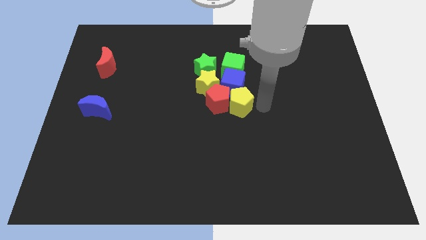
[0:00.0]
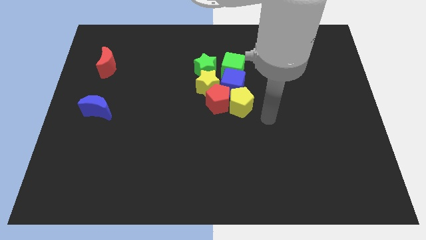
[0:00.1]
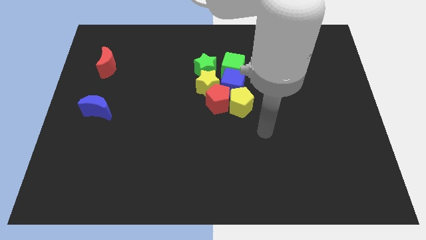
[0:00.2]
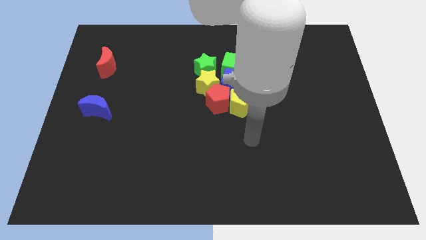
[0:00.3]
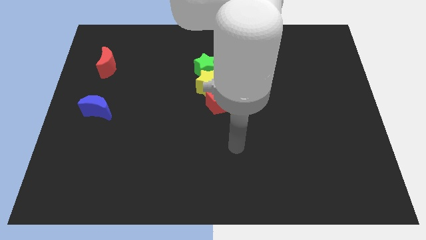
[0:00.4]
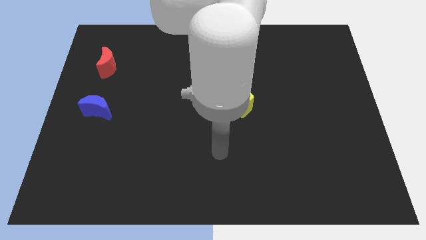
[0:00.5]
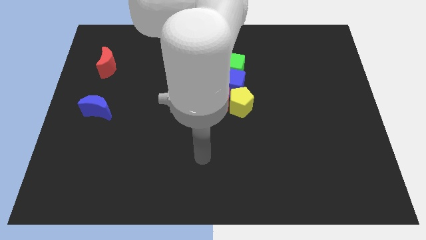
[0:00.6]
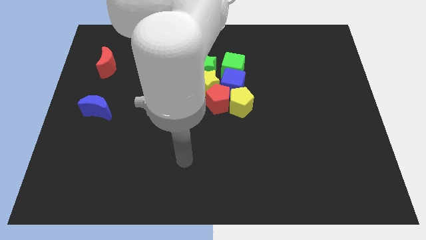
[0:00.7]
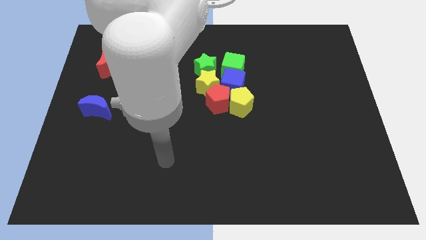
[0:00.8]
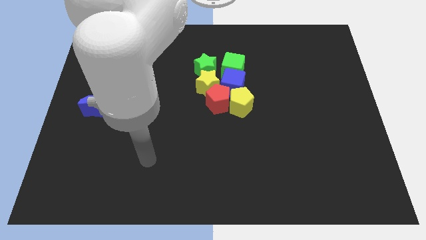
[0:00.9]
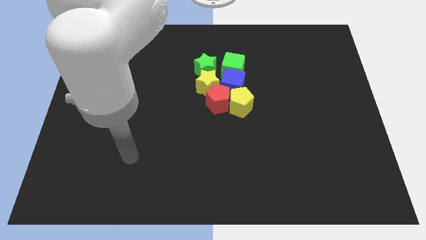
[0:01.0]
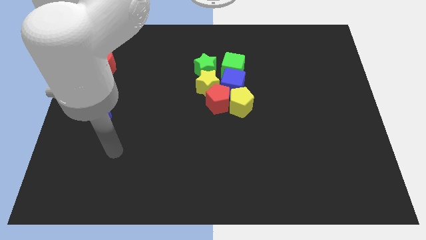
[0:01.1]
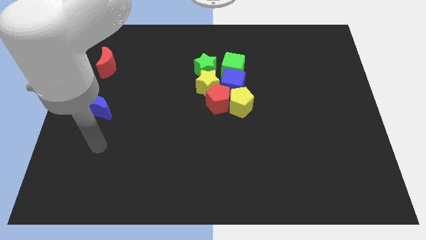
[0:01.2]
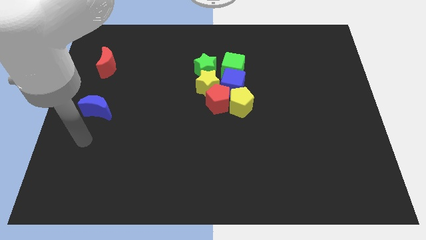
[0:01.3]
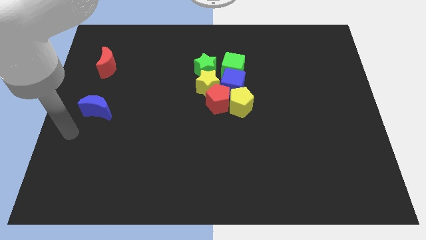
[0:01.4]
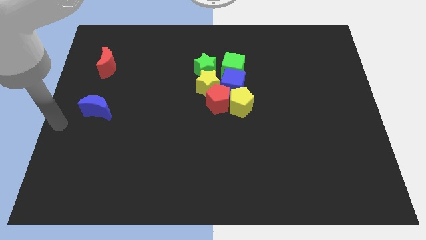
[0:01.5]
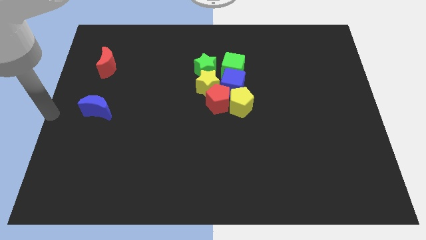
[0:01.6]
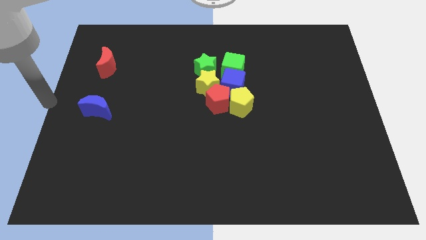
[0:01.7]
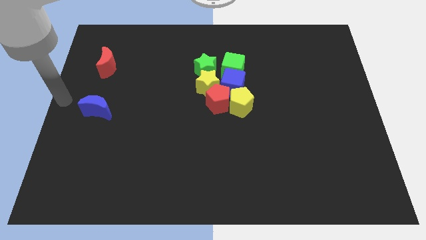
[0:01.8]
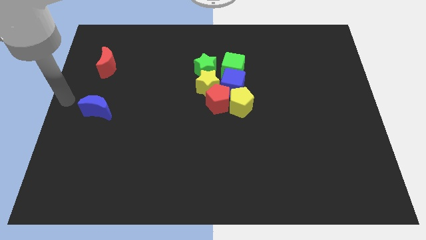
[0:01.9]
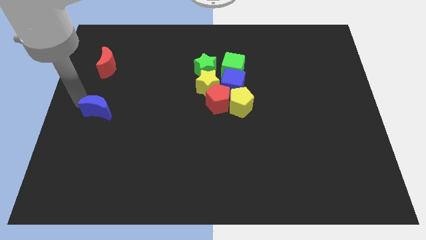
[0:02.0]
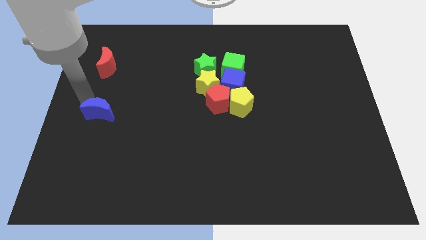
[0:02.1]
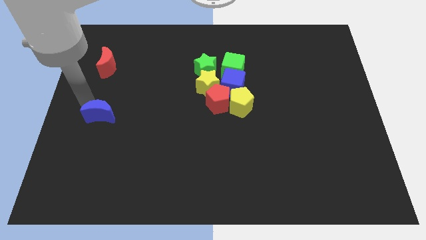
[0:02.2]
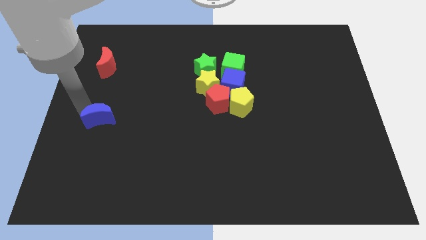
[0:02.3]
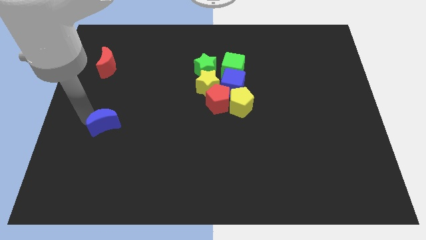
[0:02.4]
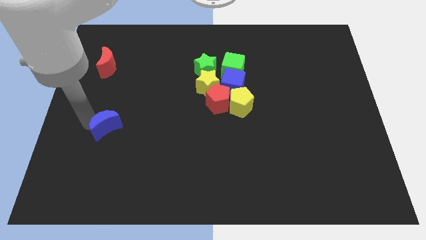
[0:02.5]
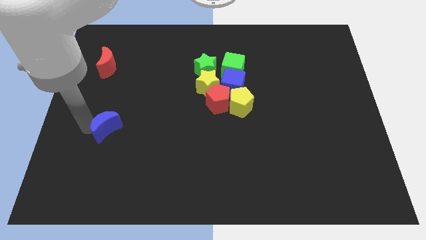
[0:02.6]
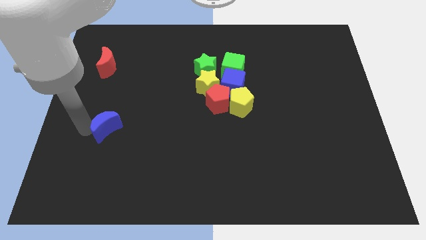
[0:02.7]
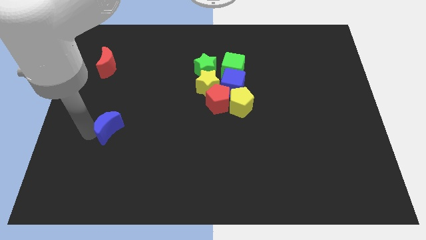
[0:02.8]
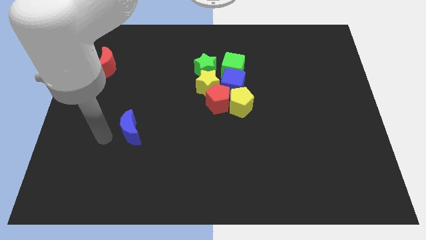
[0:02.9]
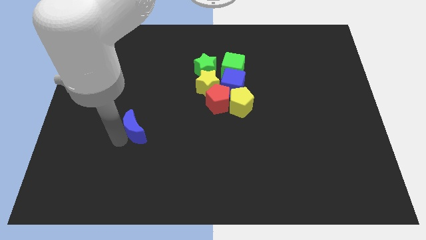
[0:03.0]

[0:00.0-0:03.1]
point your arm close to blue moon

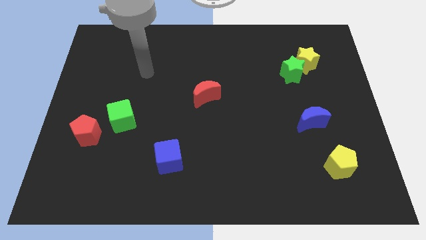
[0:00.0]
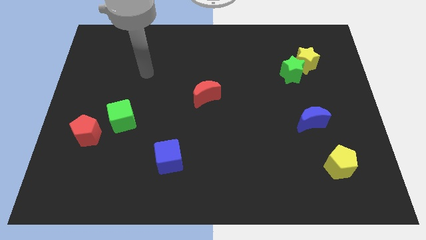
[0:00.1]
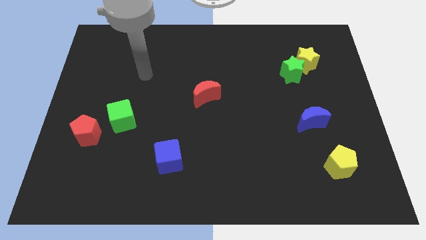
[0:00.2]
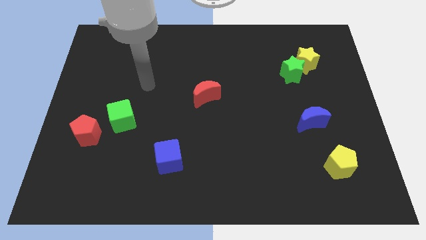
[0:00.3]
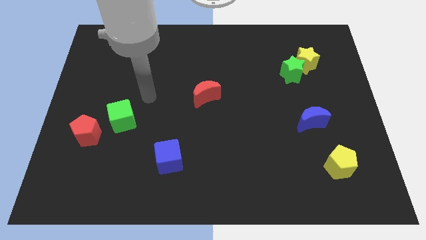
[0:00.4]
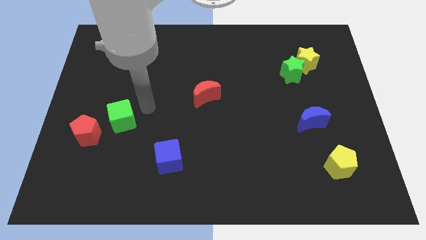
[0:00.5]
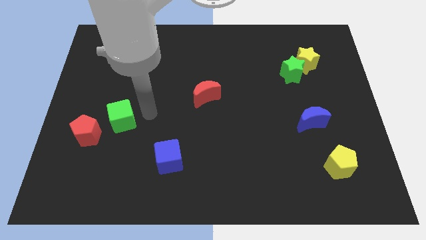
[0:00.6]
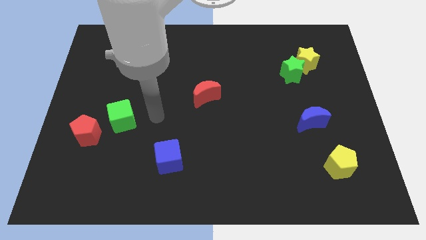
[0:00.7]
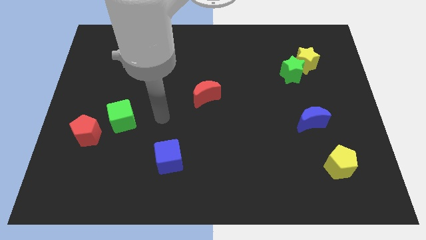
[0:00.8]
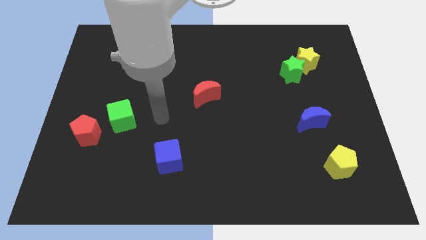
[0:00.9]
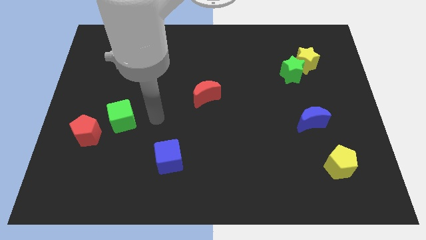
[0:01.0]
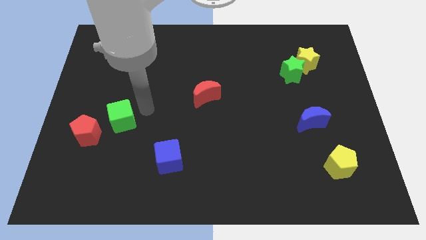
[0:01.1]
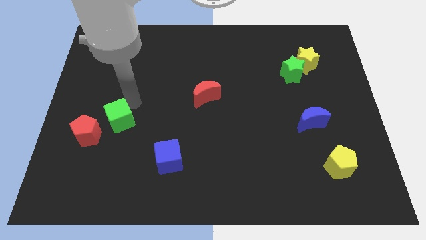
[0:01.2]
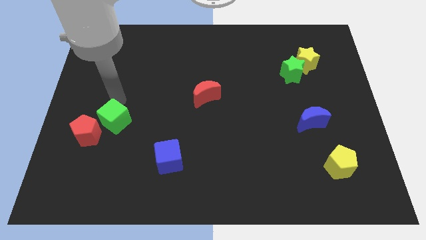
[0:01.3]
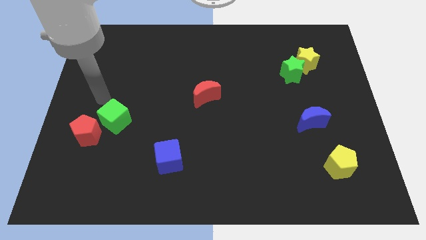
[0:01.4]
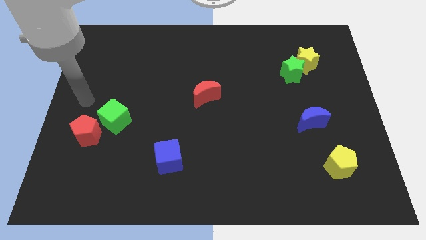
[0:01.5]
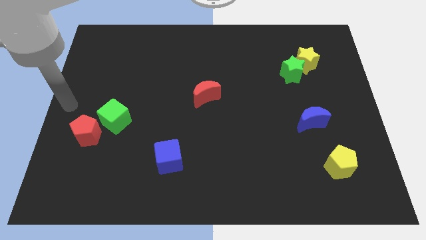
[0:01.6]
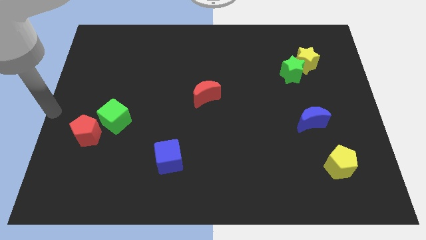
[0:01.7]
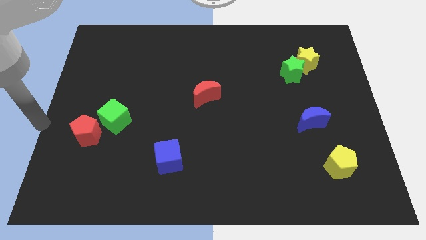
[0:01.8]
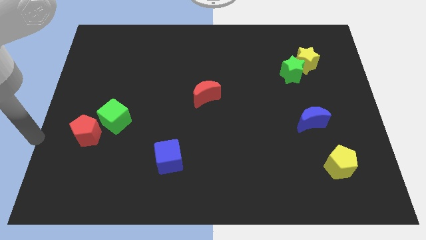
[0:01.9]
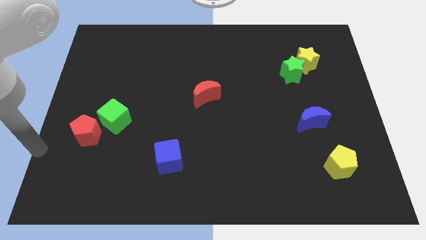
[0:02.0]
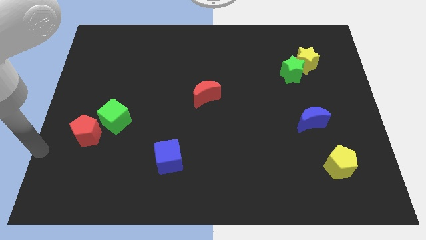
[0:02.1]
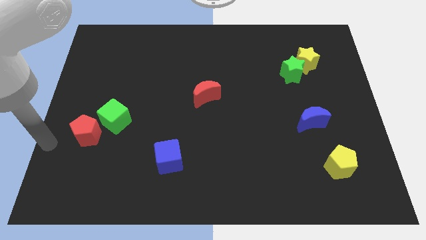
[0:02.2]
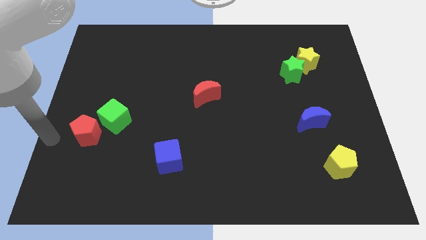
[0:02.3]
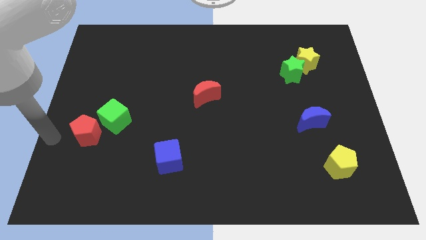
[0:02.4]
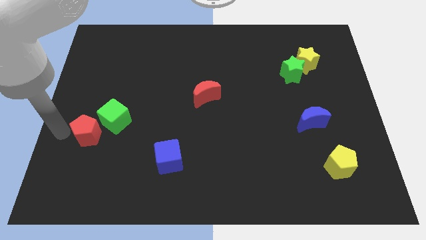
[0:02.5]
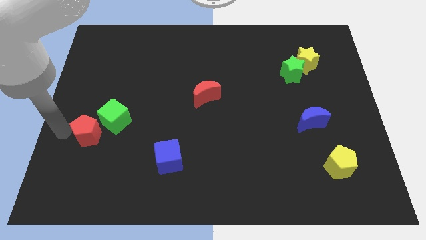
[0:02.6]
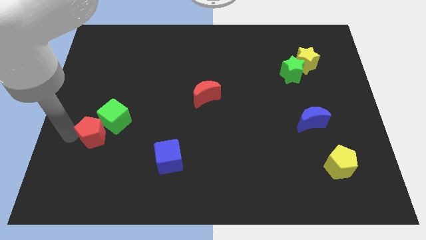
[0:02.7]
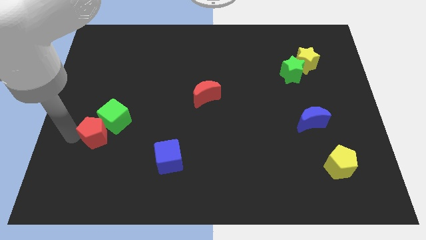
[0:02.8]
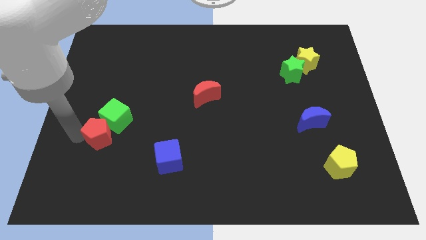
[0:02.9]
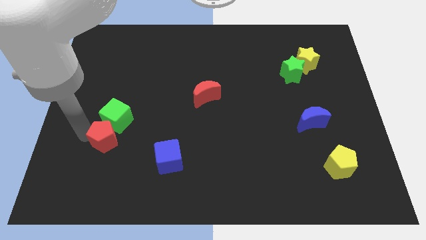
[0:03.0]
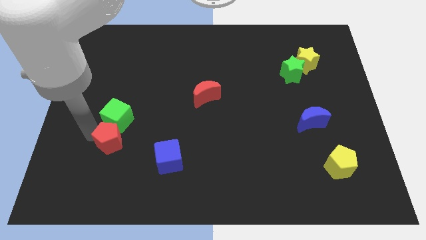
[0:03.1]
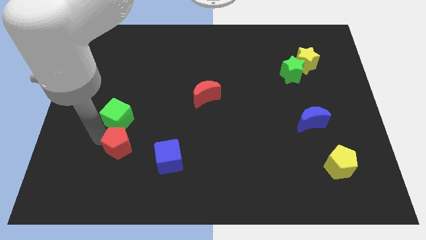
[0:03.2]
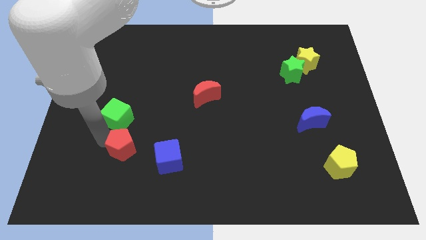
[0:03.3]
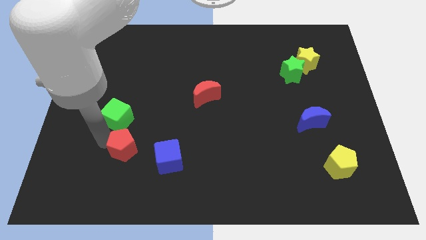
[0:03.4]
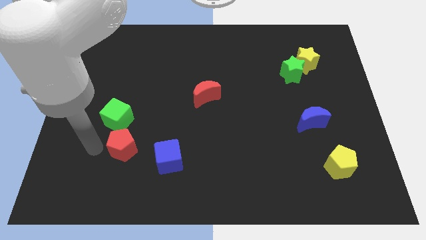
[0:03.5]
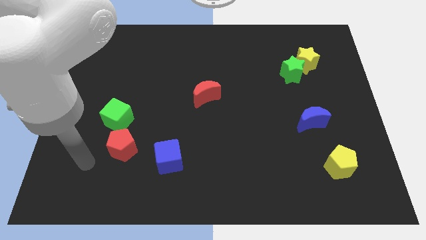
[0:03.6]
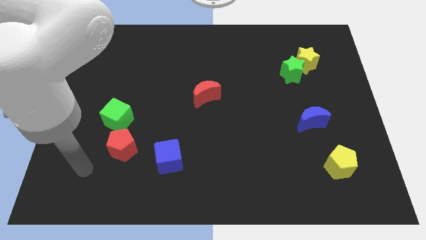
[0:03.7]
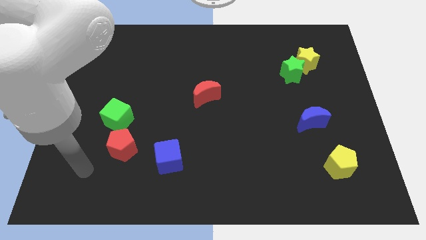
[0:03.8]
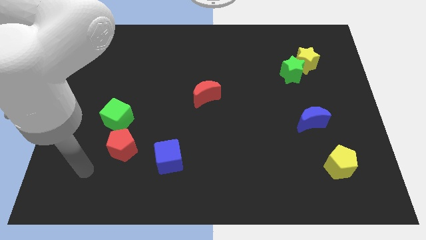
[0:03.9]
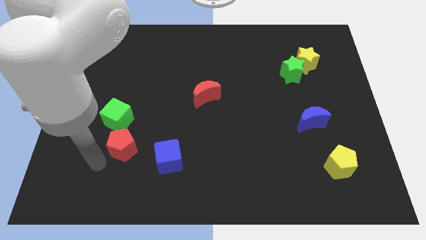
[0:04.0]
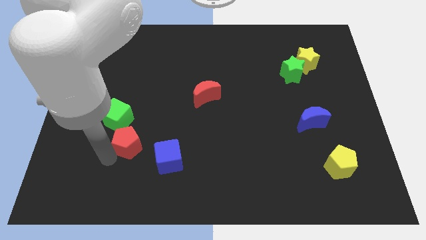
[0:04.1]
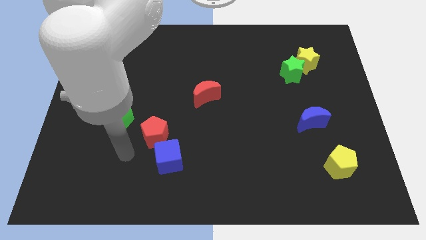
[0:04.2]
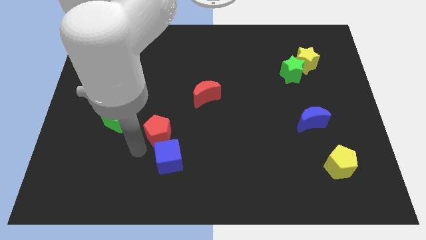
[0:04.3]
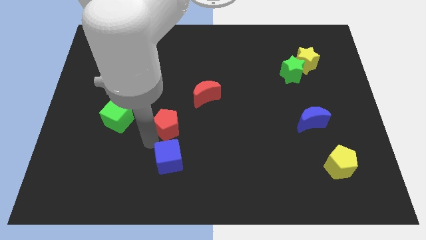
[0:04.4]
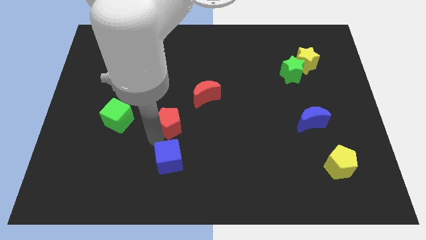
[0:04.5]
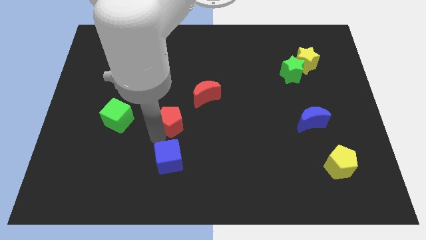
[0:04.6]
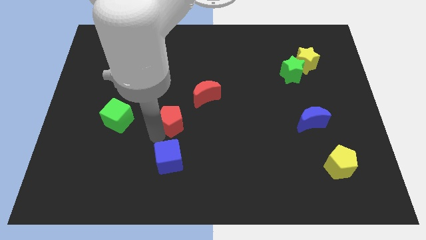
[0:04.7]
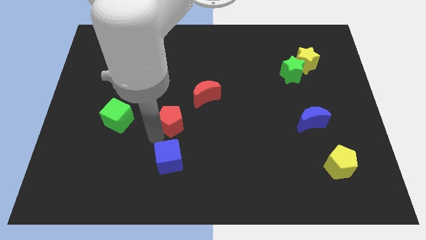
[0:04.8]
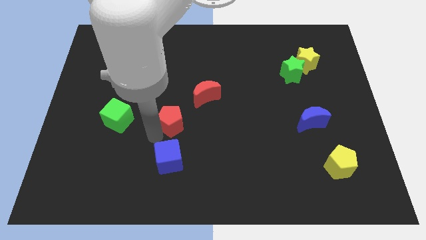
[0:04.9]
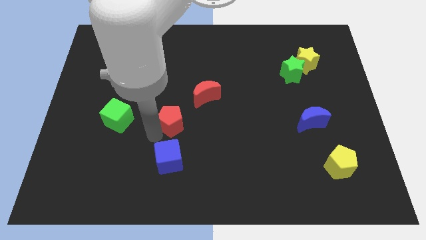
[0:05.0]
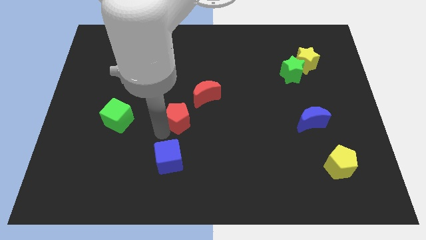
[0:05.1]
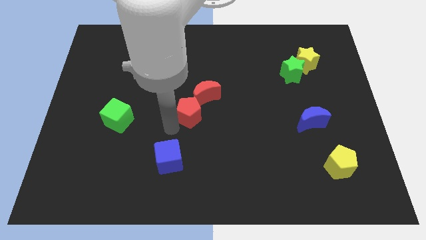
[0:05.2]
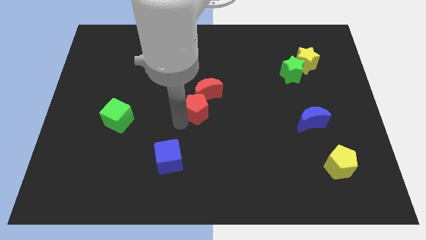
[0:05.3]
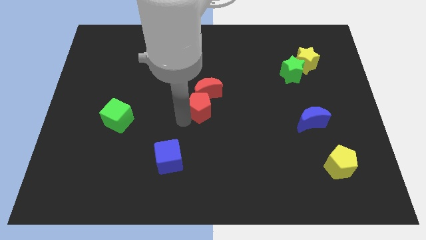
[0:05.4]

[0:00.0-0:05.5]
move red pentagon into red crescent

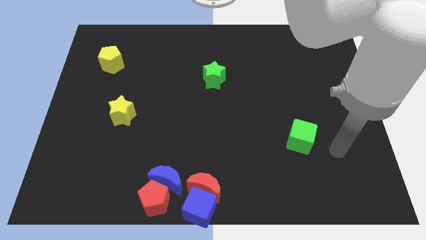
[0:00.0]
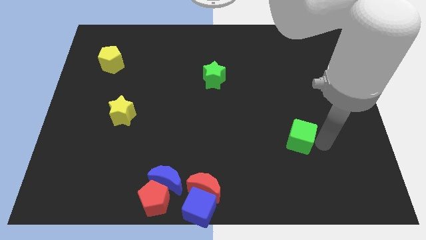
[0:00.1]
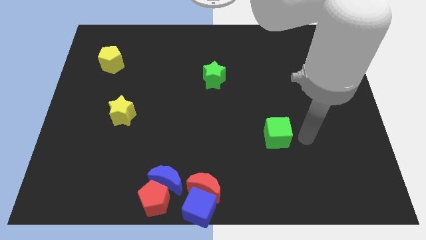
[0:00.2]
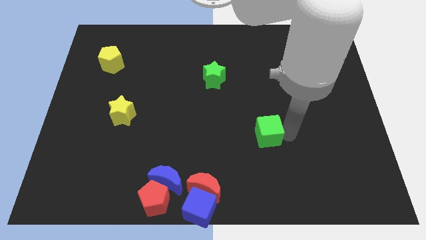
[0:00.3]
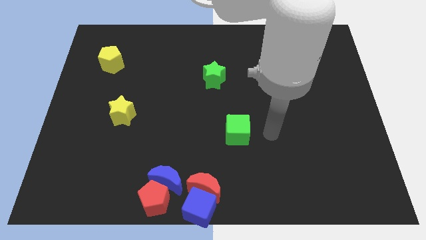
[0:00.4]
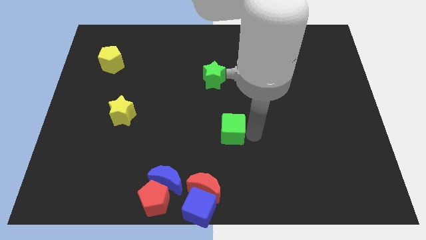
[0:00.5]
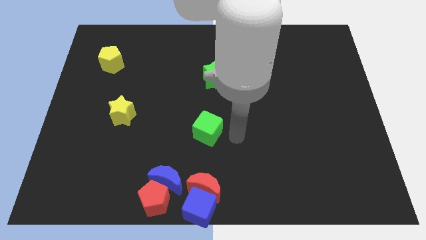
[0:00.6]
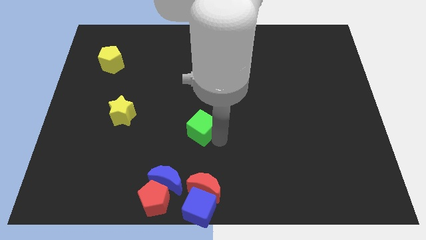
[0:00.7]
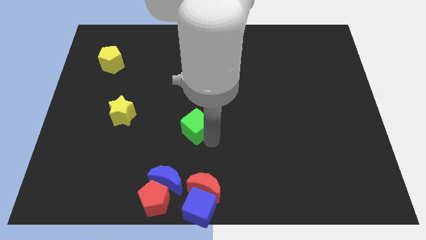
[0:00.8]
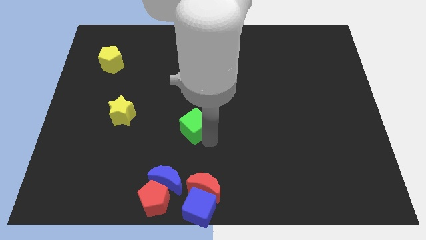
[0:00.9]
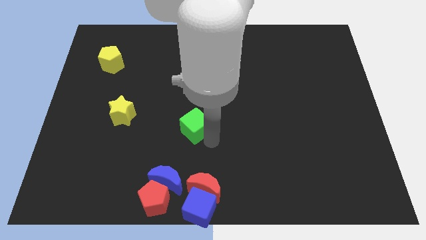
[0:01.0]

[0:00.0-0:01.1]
move the green cube to the centre of the board
